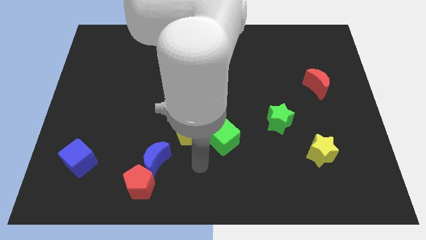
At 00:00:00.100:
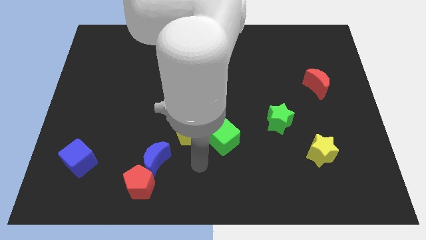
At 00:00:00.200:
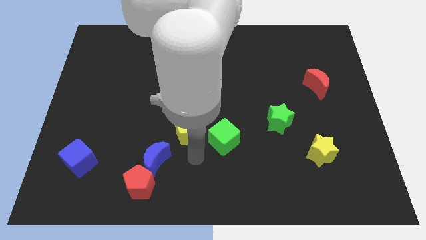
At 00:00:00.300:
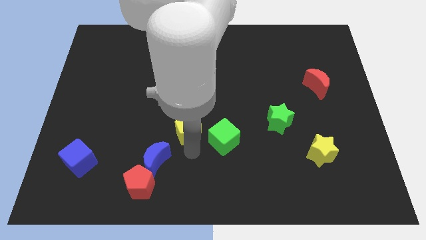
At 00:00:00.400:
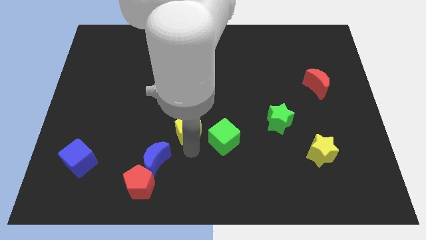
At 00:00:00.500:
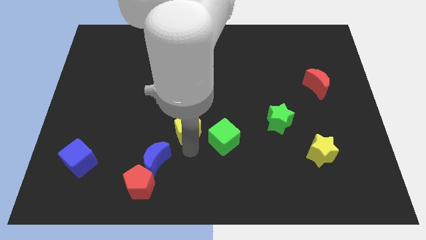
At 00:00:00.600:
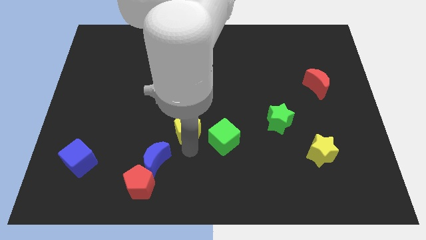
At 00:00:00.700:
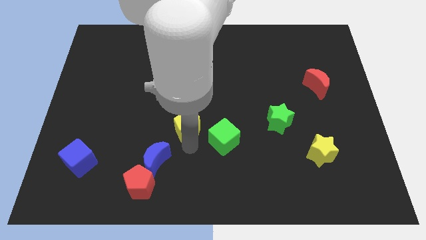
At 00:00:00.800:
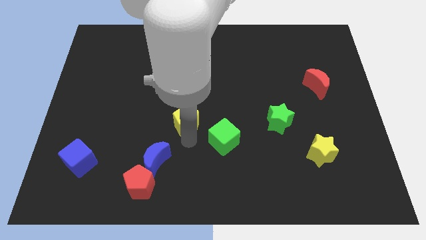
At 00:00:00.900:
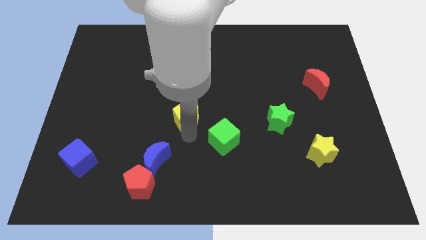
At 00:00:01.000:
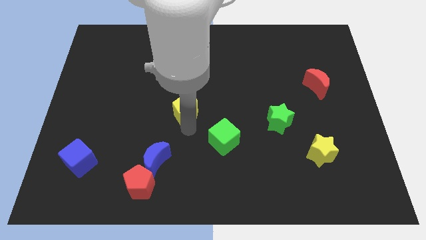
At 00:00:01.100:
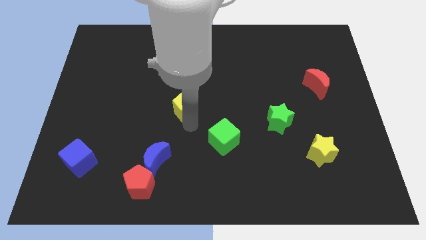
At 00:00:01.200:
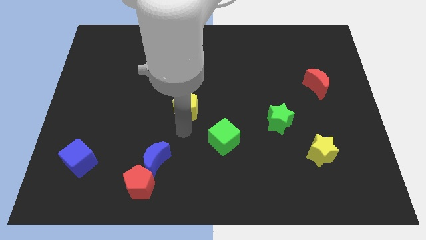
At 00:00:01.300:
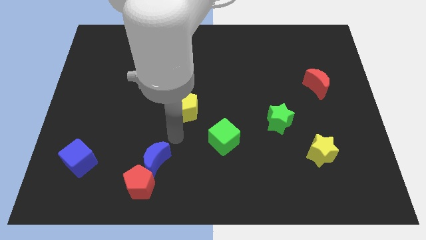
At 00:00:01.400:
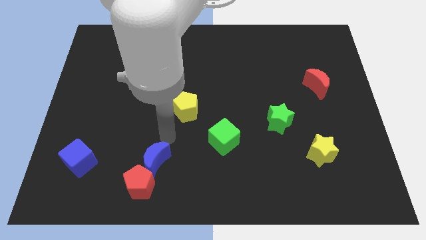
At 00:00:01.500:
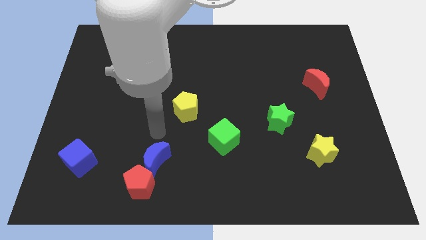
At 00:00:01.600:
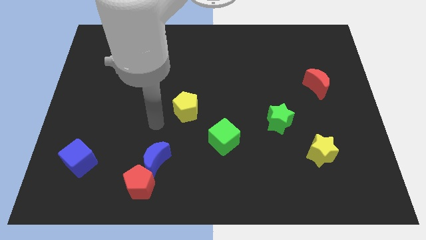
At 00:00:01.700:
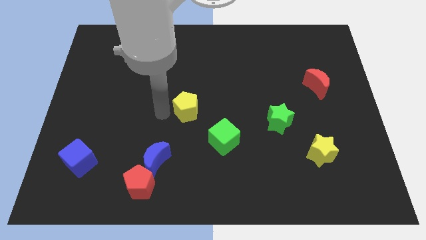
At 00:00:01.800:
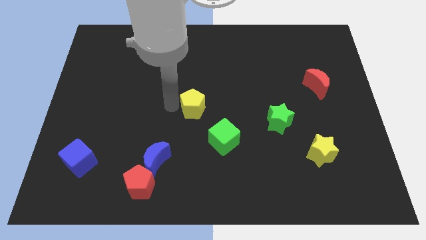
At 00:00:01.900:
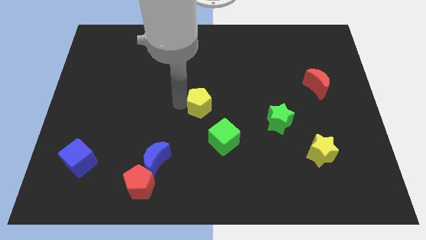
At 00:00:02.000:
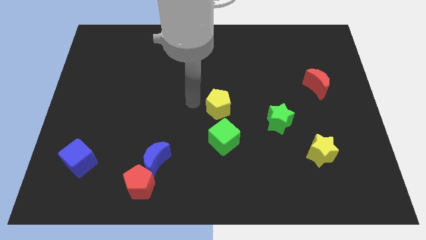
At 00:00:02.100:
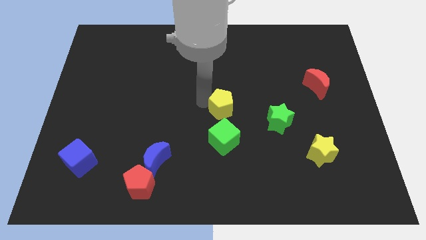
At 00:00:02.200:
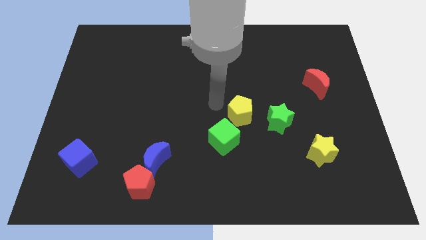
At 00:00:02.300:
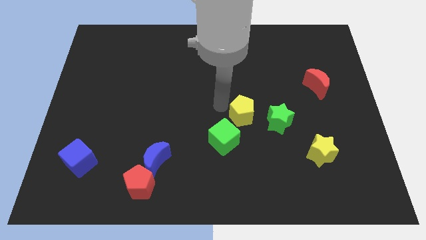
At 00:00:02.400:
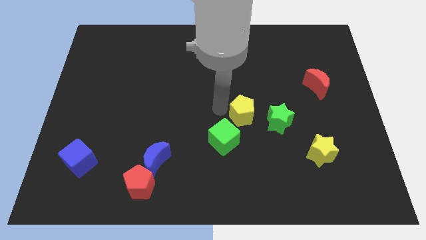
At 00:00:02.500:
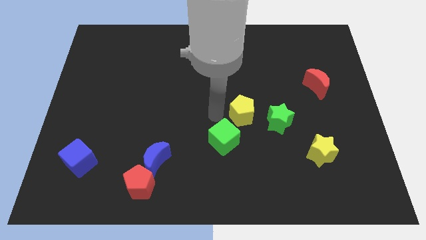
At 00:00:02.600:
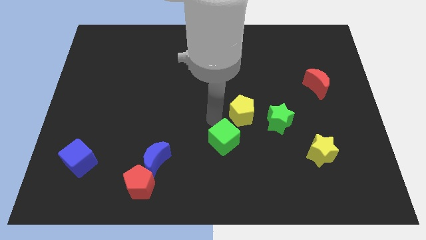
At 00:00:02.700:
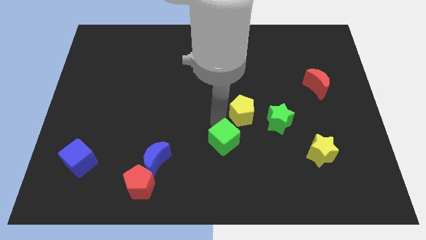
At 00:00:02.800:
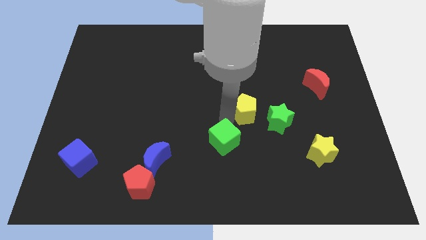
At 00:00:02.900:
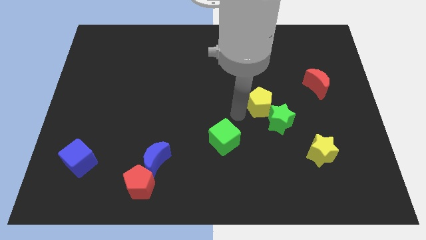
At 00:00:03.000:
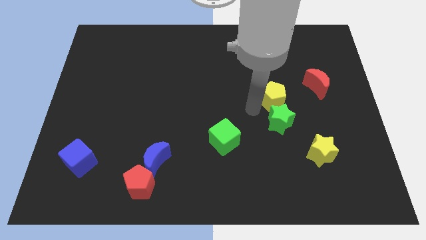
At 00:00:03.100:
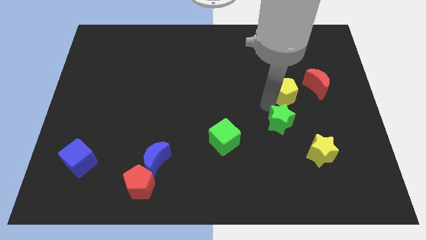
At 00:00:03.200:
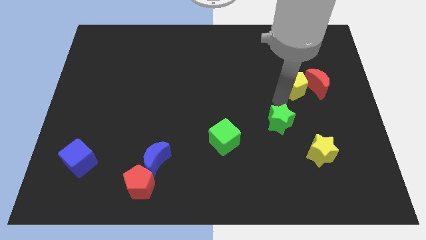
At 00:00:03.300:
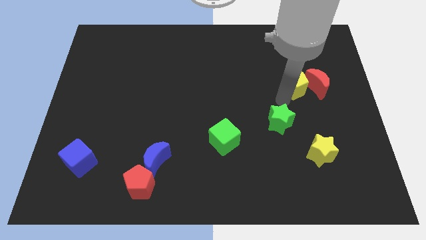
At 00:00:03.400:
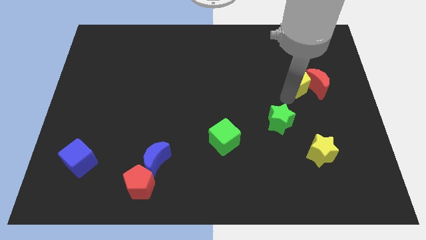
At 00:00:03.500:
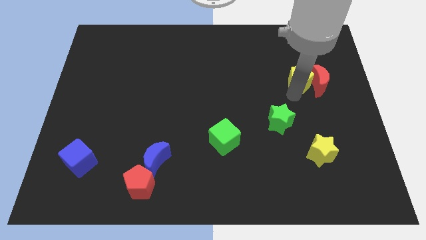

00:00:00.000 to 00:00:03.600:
move the yellow pentagon into the red moon

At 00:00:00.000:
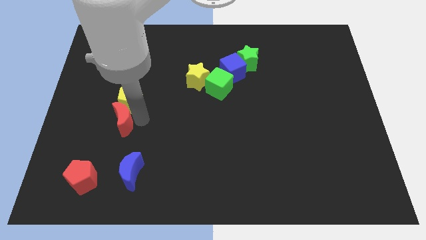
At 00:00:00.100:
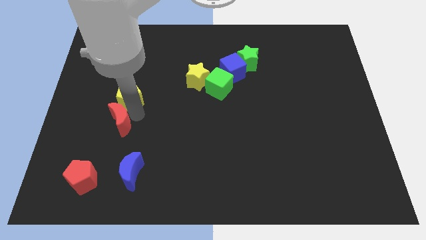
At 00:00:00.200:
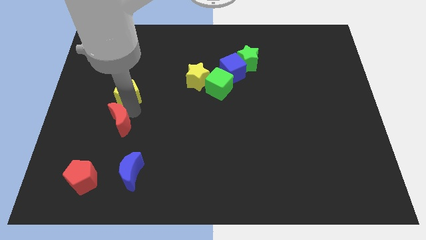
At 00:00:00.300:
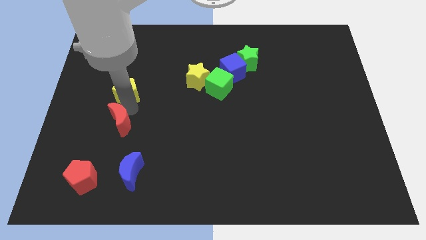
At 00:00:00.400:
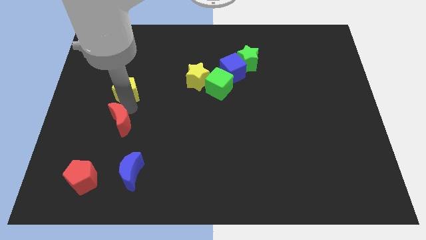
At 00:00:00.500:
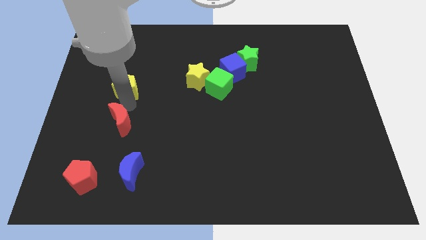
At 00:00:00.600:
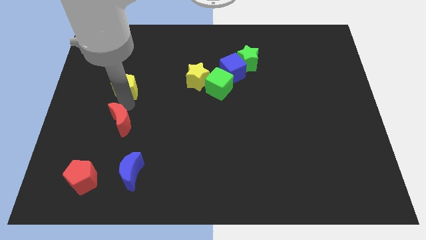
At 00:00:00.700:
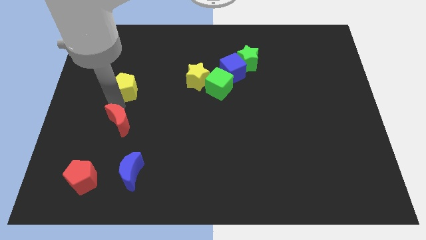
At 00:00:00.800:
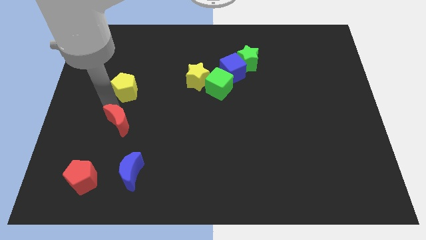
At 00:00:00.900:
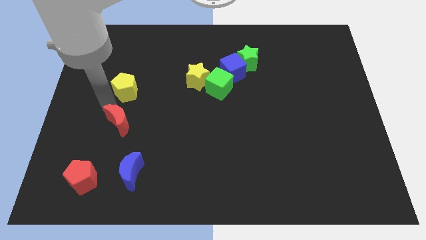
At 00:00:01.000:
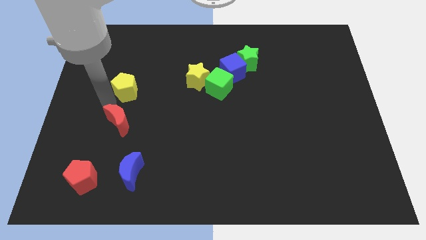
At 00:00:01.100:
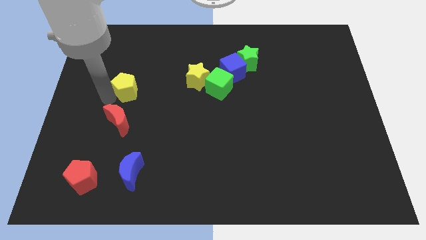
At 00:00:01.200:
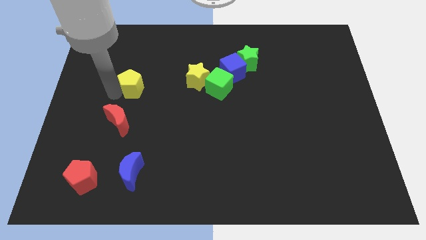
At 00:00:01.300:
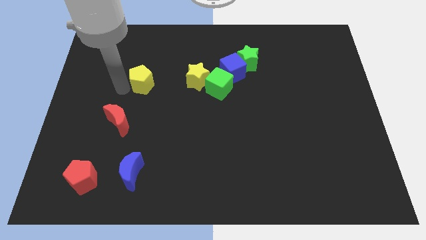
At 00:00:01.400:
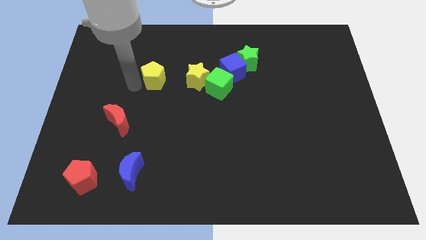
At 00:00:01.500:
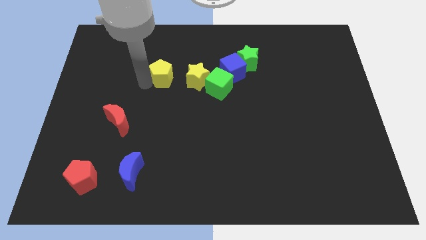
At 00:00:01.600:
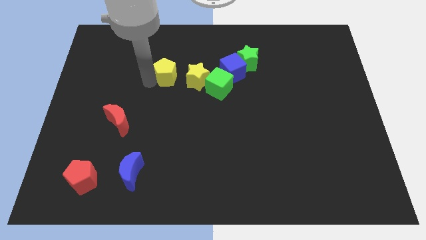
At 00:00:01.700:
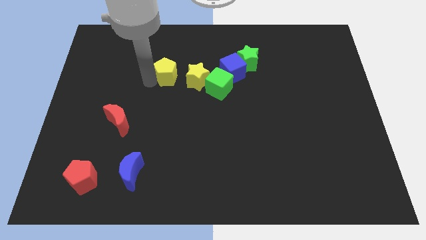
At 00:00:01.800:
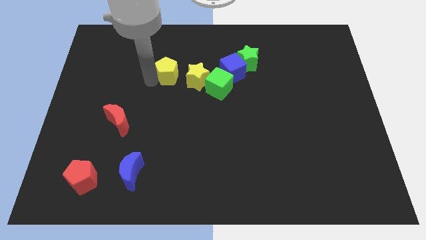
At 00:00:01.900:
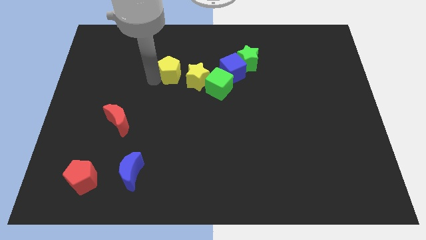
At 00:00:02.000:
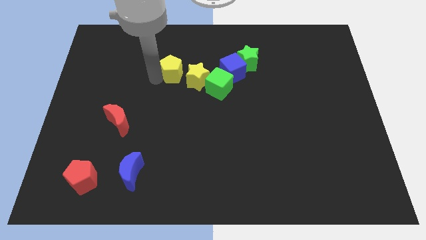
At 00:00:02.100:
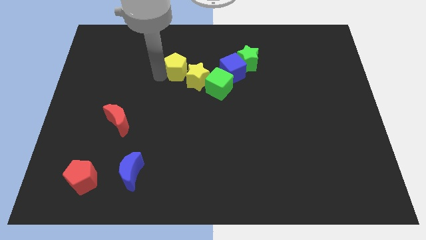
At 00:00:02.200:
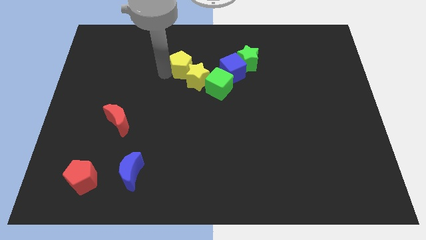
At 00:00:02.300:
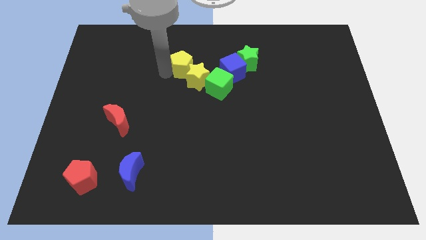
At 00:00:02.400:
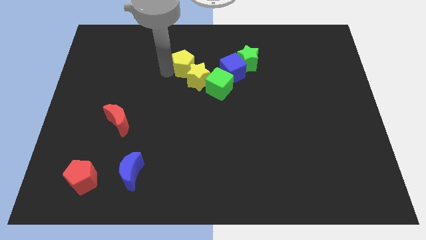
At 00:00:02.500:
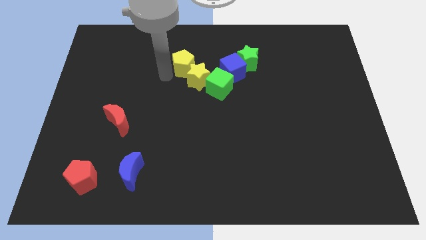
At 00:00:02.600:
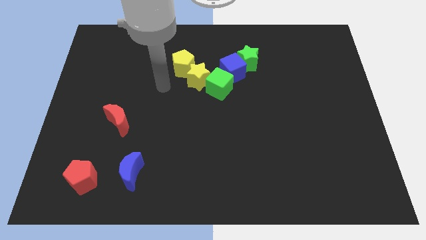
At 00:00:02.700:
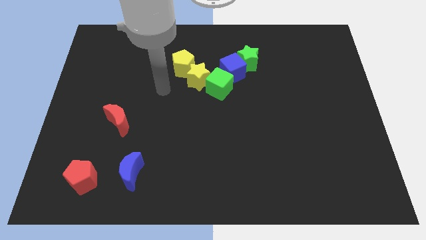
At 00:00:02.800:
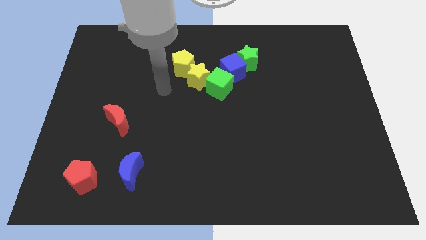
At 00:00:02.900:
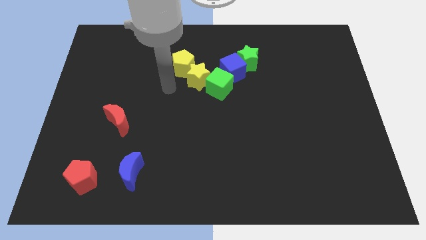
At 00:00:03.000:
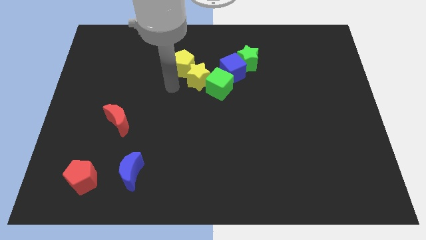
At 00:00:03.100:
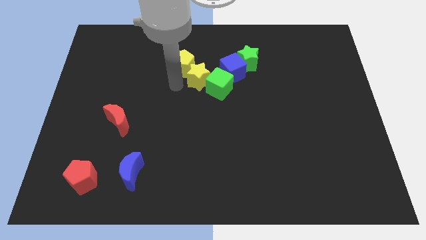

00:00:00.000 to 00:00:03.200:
push the yellow pentagon to the left of the yellow star

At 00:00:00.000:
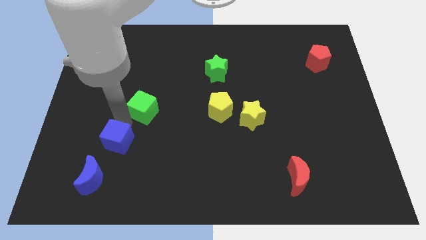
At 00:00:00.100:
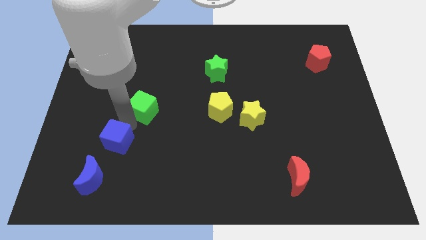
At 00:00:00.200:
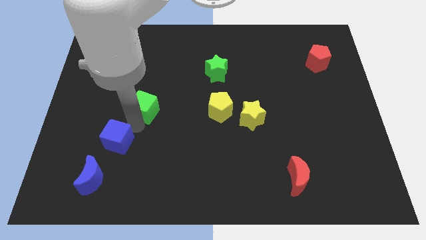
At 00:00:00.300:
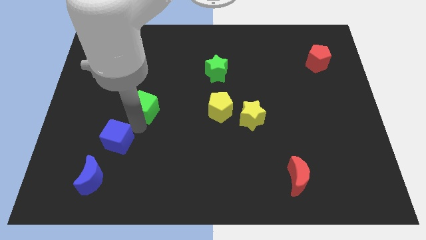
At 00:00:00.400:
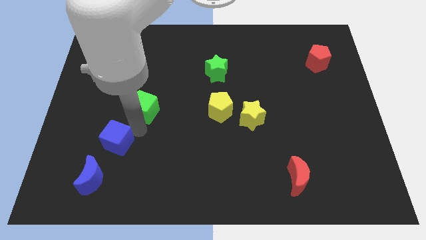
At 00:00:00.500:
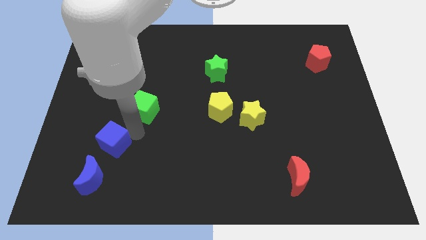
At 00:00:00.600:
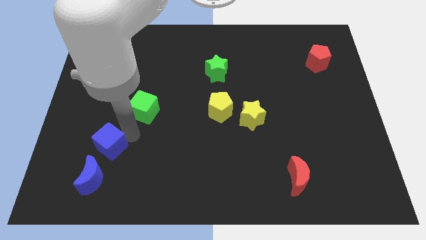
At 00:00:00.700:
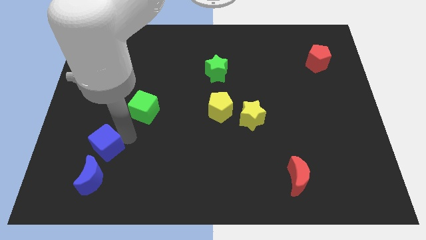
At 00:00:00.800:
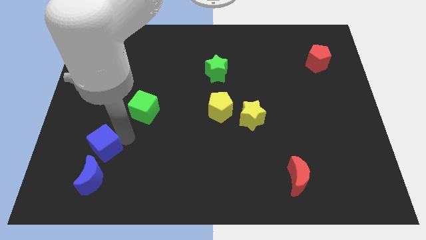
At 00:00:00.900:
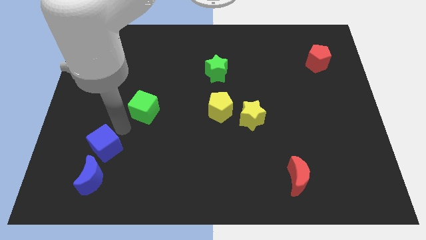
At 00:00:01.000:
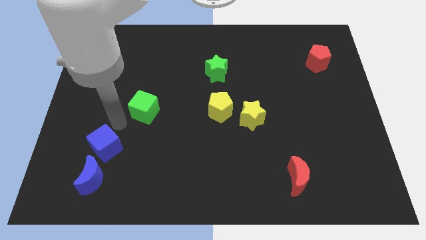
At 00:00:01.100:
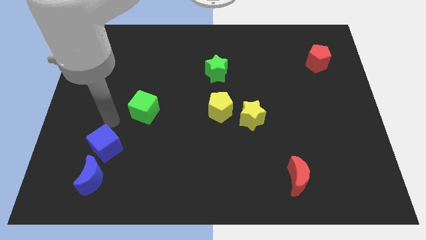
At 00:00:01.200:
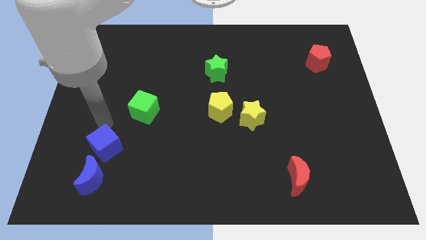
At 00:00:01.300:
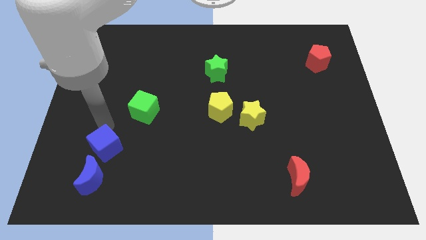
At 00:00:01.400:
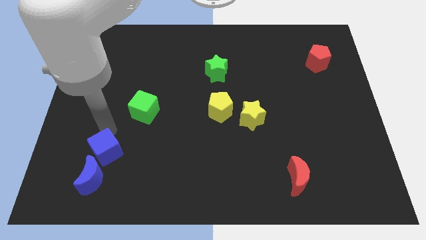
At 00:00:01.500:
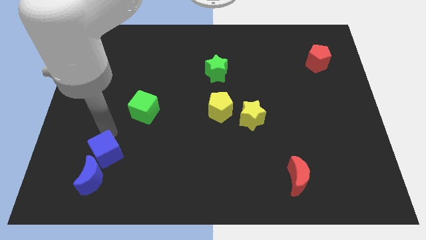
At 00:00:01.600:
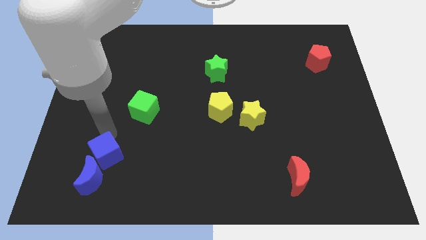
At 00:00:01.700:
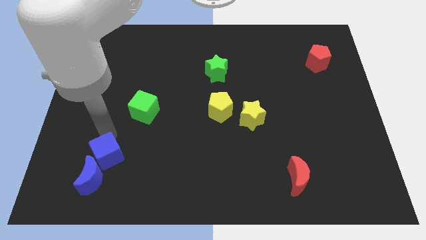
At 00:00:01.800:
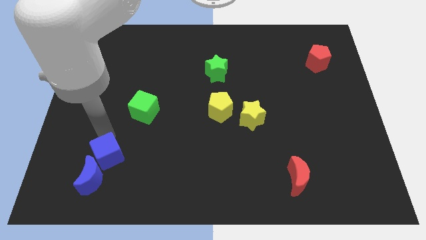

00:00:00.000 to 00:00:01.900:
push the blue cube towards the blue moon

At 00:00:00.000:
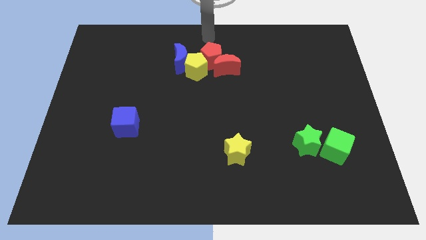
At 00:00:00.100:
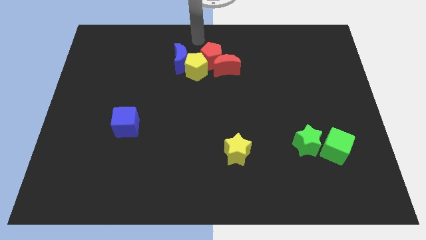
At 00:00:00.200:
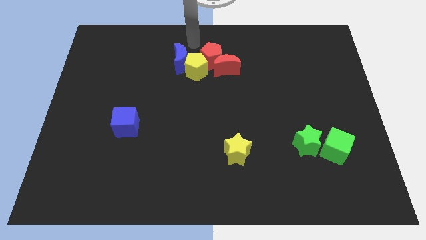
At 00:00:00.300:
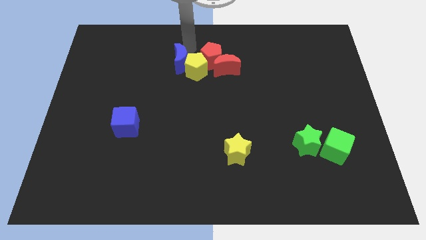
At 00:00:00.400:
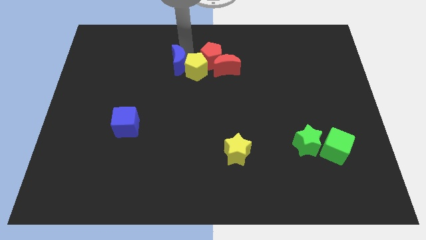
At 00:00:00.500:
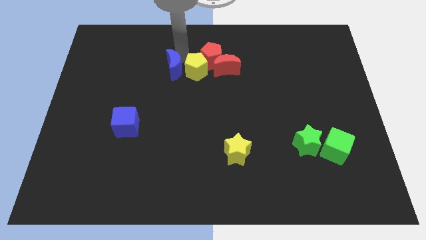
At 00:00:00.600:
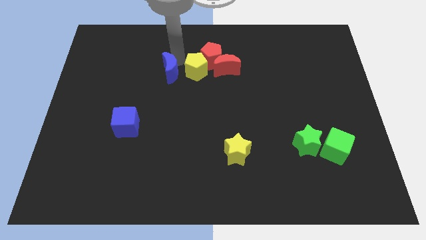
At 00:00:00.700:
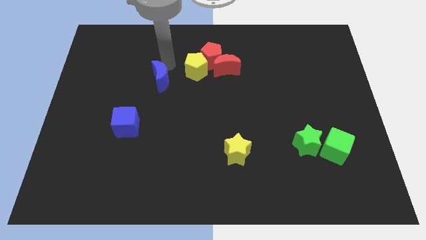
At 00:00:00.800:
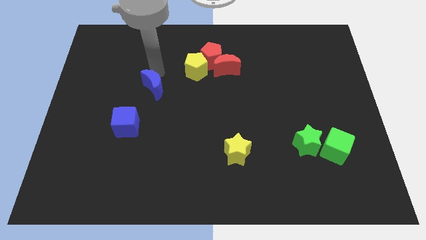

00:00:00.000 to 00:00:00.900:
push the blue crescent to the bottom left of the yellow pentagon
